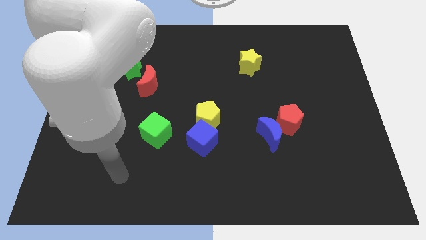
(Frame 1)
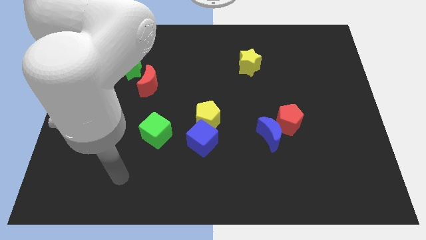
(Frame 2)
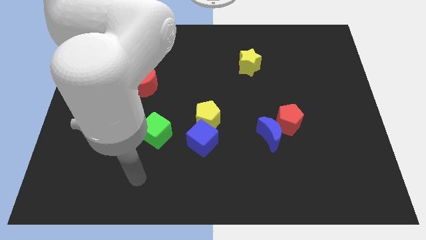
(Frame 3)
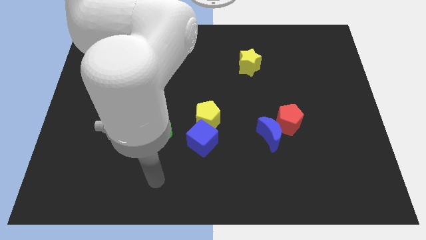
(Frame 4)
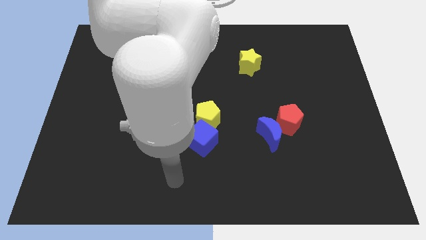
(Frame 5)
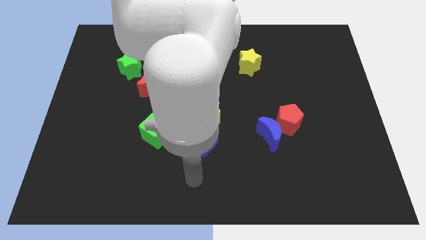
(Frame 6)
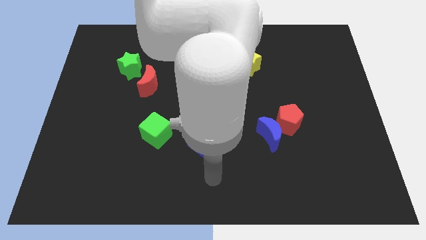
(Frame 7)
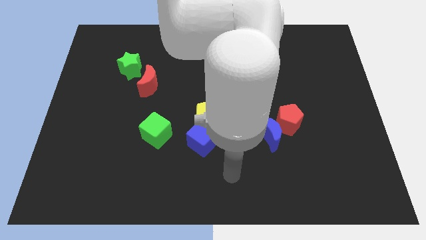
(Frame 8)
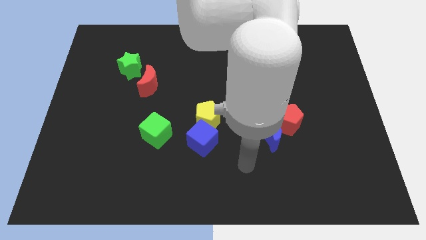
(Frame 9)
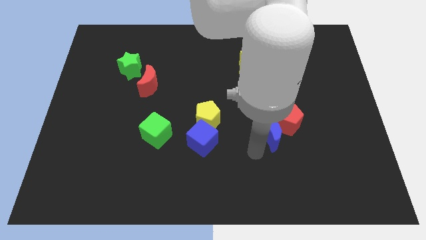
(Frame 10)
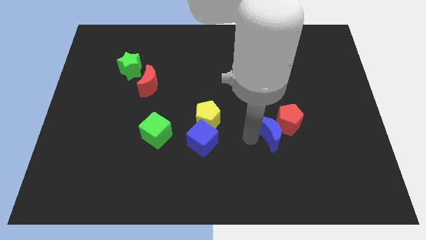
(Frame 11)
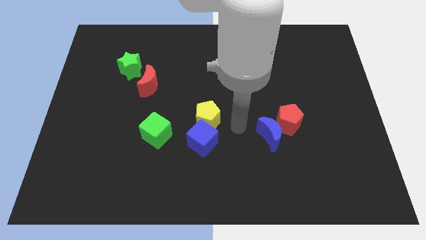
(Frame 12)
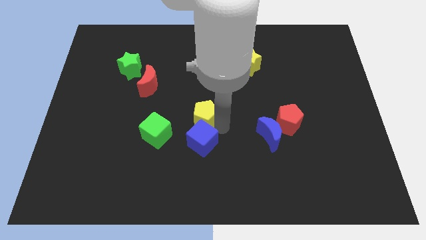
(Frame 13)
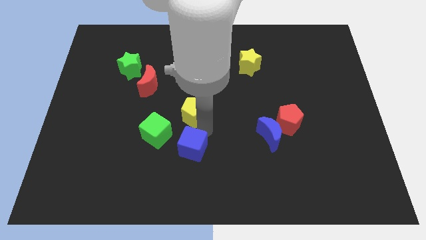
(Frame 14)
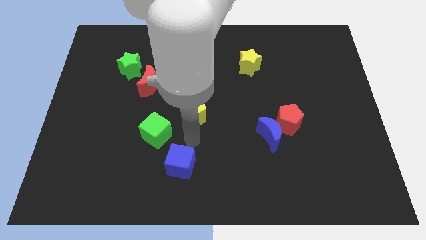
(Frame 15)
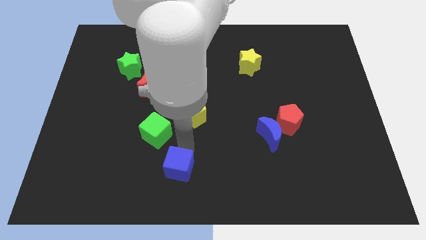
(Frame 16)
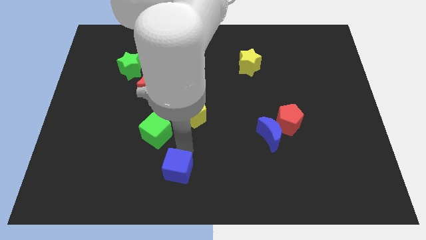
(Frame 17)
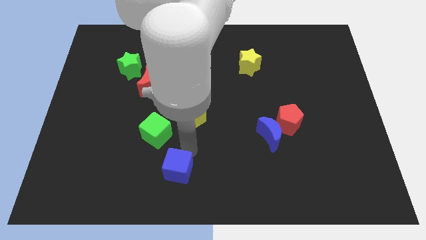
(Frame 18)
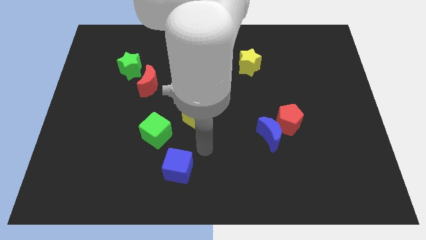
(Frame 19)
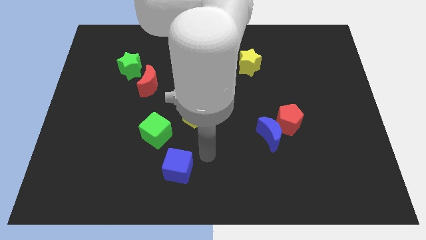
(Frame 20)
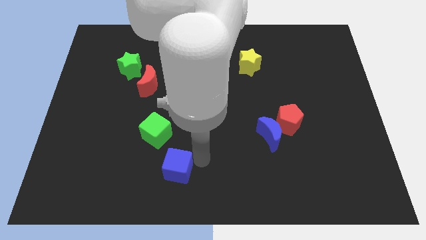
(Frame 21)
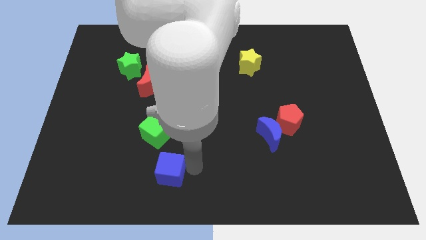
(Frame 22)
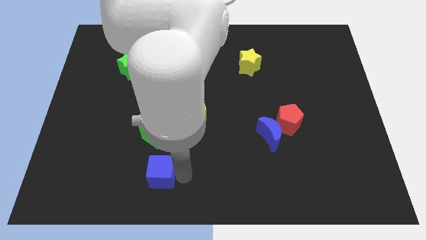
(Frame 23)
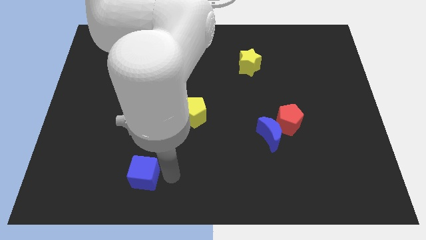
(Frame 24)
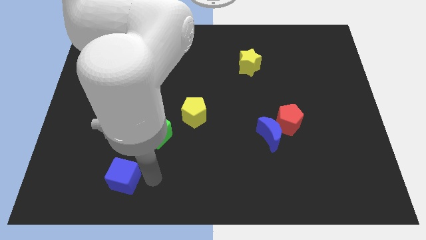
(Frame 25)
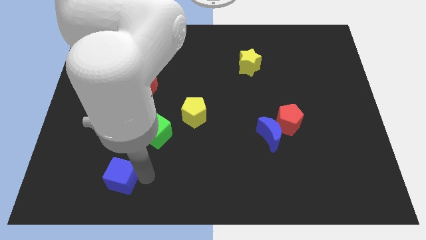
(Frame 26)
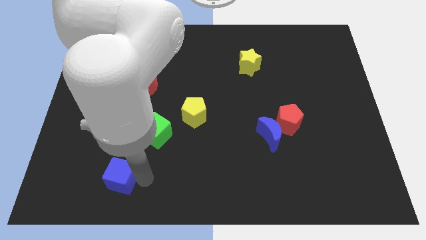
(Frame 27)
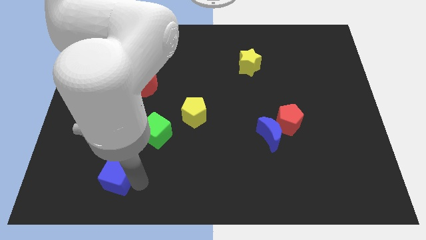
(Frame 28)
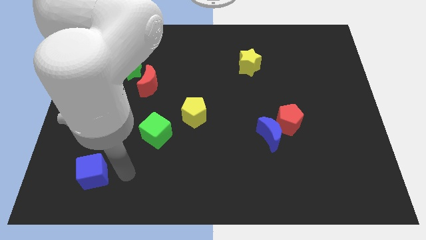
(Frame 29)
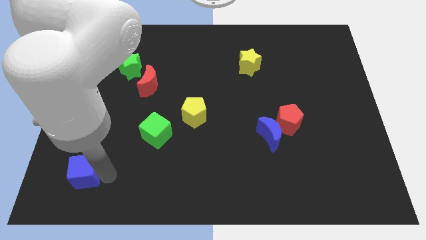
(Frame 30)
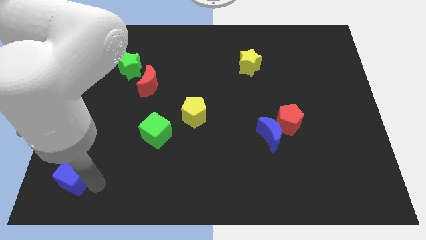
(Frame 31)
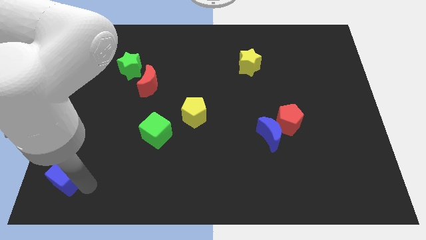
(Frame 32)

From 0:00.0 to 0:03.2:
move the blue cube towards the bottom left of the board

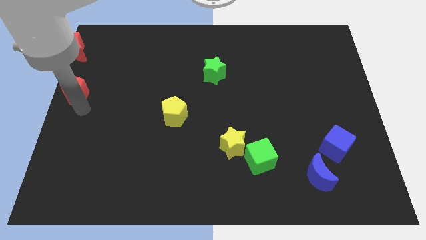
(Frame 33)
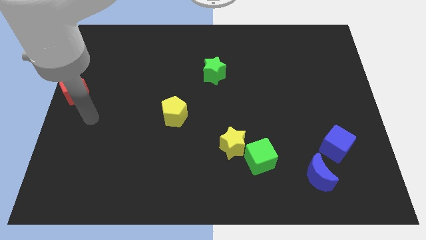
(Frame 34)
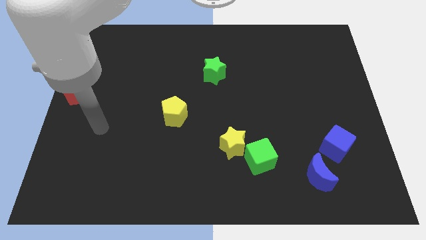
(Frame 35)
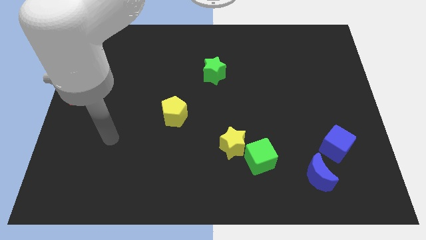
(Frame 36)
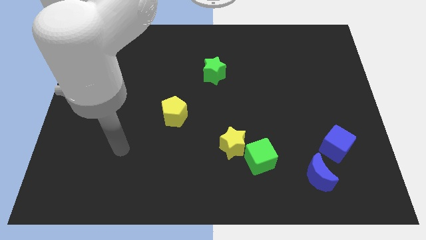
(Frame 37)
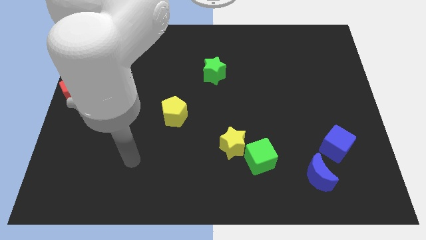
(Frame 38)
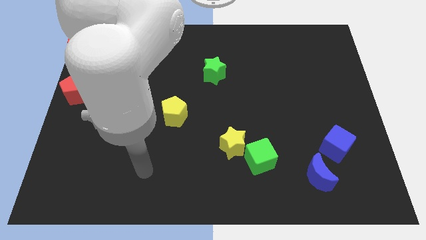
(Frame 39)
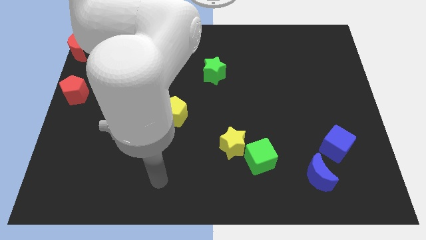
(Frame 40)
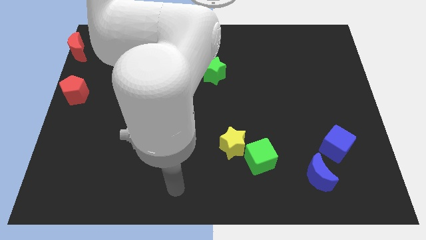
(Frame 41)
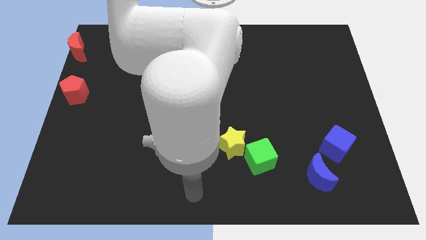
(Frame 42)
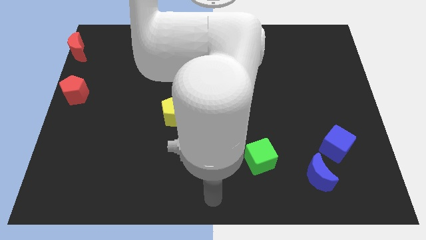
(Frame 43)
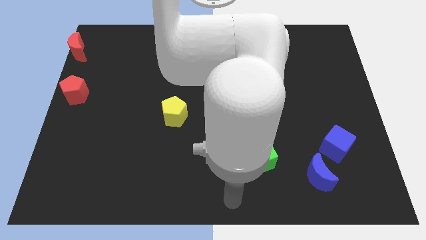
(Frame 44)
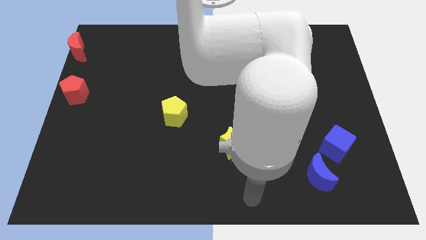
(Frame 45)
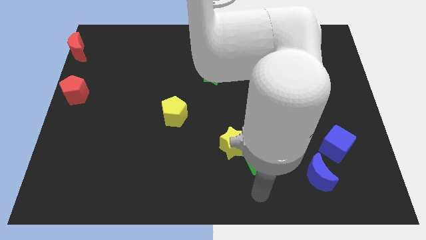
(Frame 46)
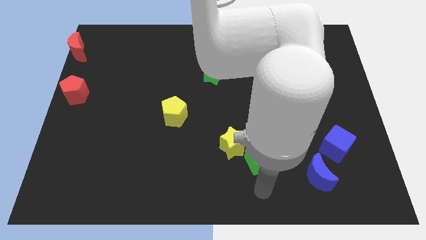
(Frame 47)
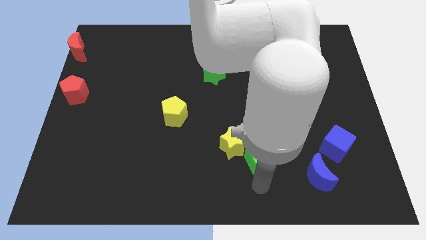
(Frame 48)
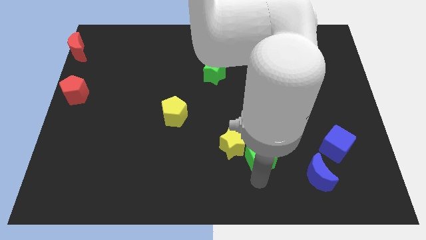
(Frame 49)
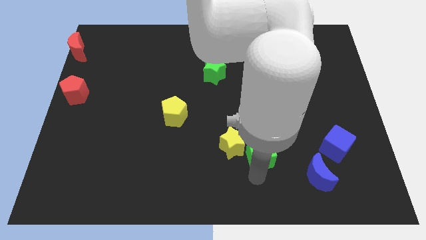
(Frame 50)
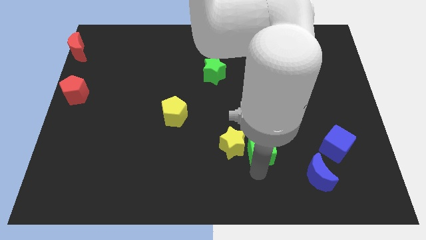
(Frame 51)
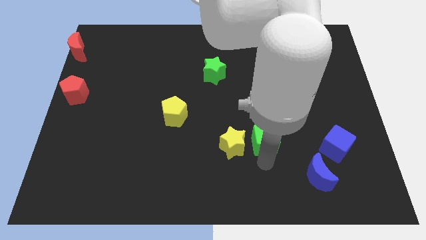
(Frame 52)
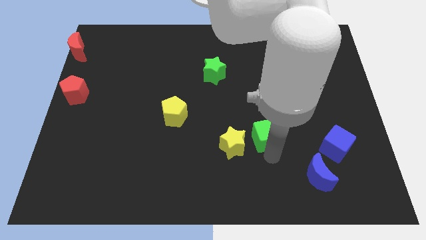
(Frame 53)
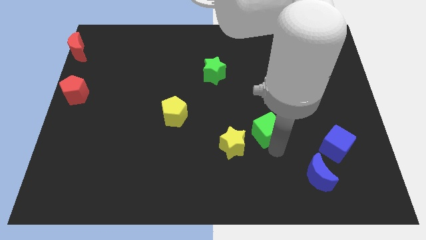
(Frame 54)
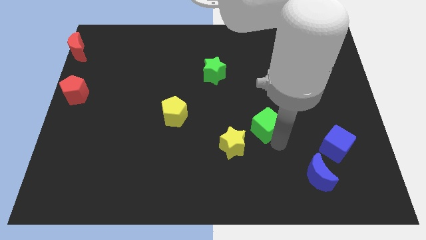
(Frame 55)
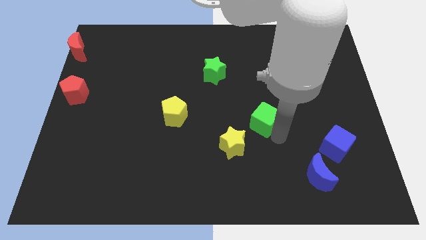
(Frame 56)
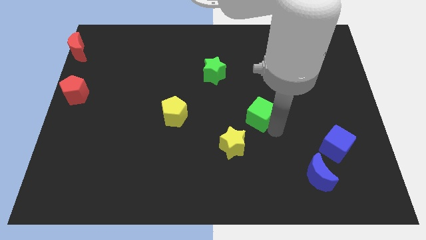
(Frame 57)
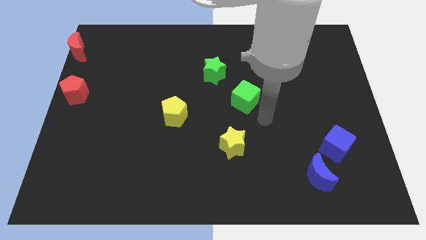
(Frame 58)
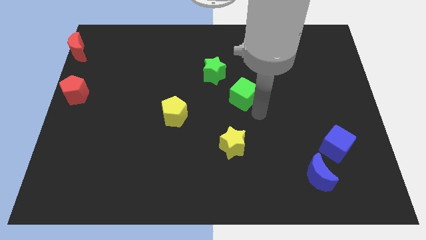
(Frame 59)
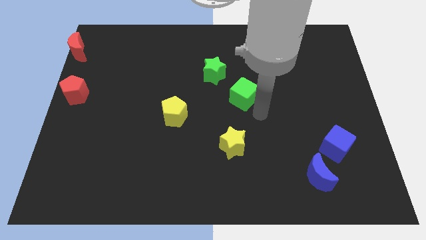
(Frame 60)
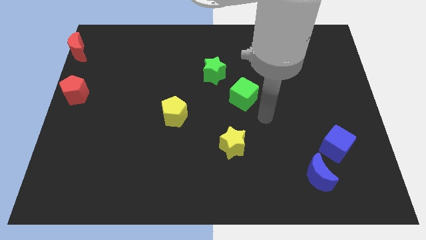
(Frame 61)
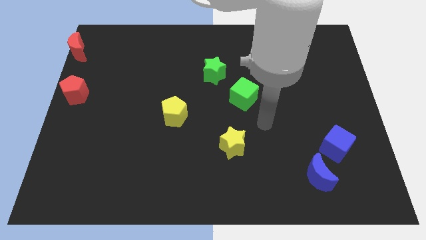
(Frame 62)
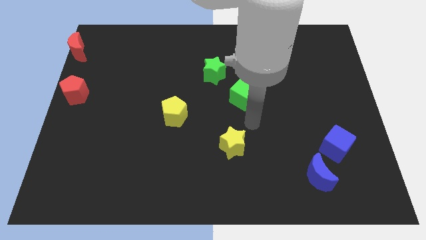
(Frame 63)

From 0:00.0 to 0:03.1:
place the green cube in between the green star and the yellow star

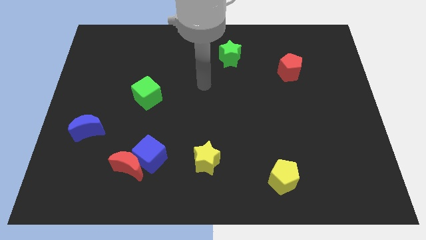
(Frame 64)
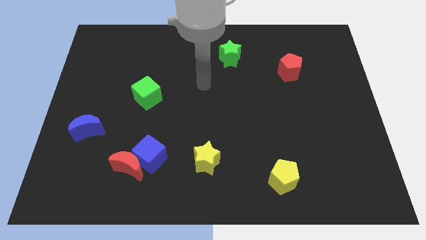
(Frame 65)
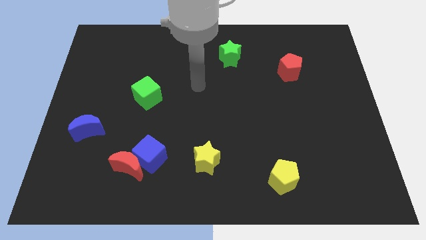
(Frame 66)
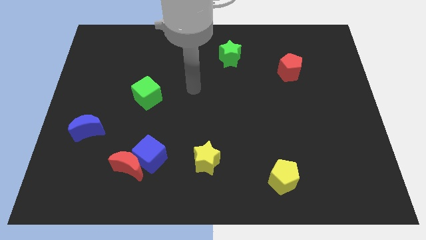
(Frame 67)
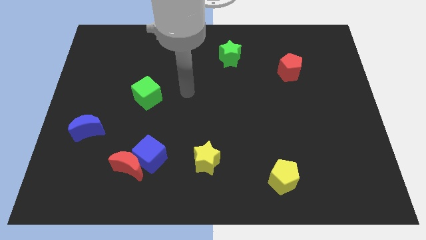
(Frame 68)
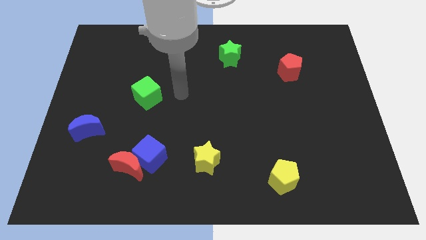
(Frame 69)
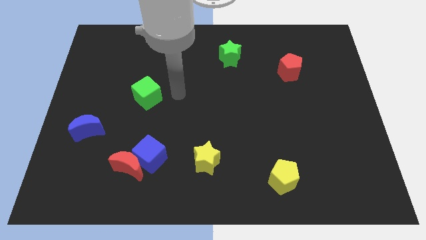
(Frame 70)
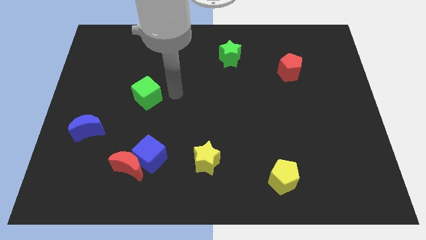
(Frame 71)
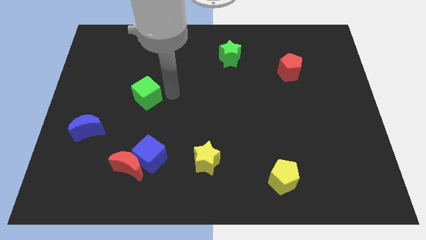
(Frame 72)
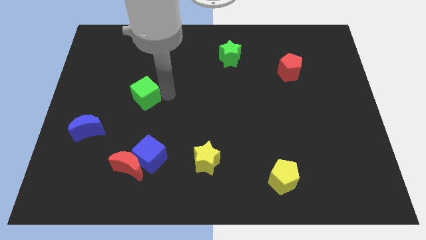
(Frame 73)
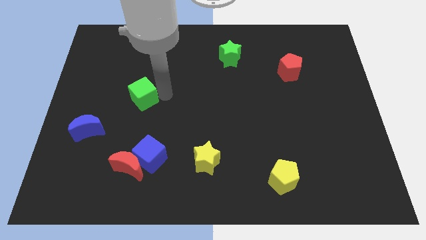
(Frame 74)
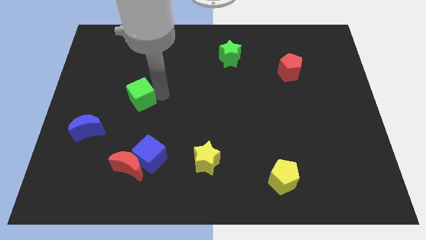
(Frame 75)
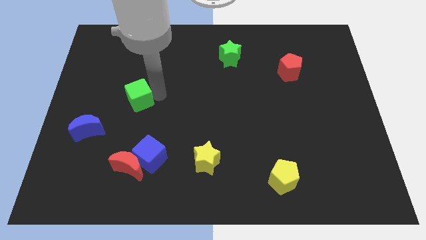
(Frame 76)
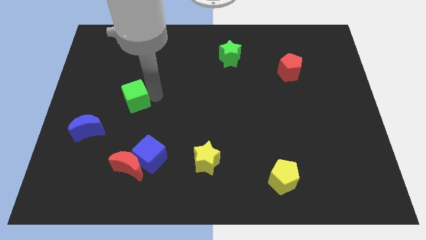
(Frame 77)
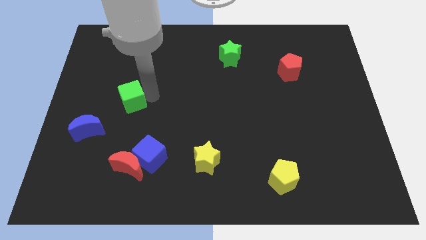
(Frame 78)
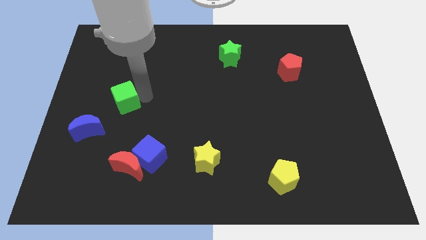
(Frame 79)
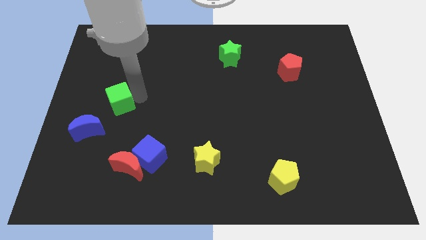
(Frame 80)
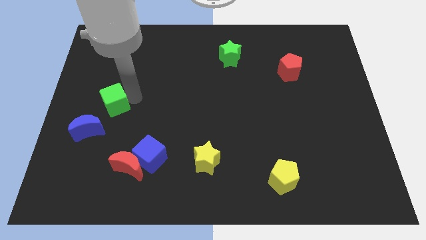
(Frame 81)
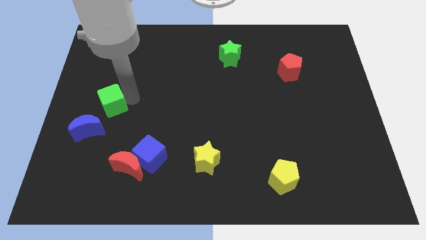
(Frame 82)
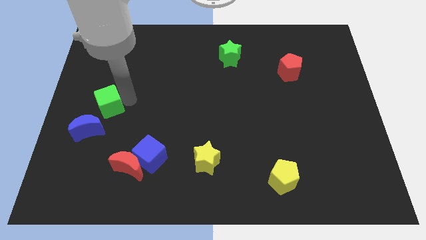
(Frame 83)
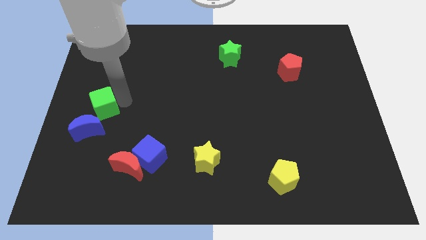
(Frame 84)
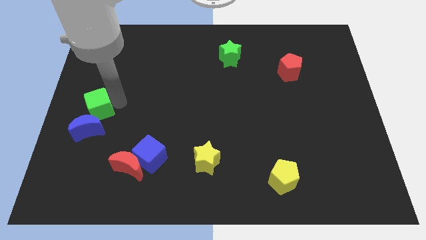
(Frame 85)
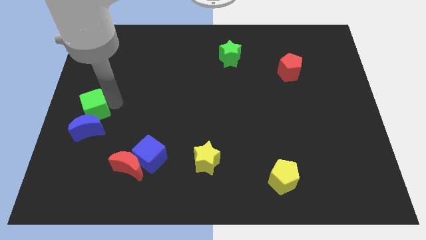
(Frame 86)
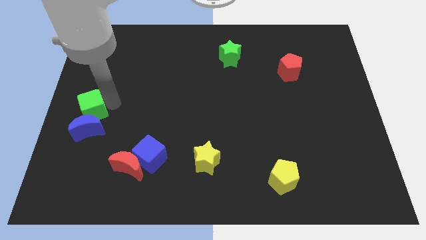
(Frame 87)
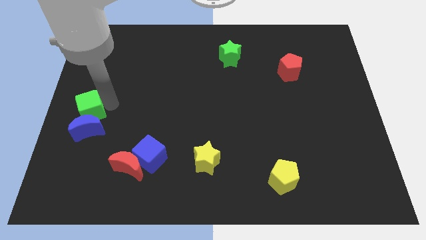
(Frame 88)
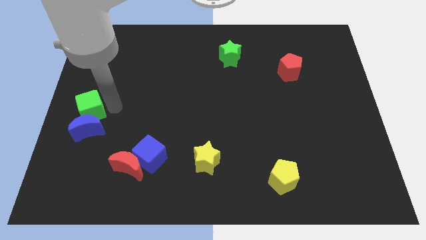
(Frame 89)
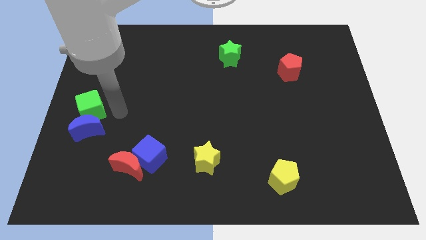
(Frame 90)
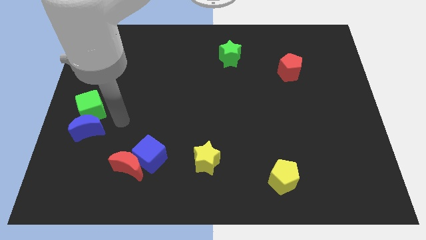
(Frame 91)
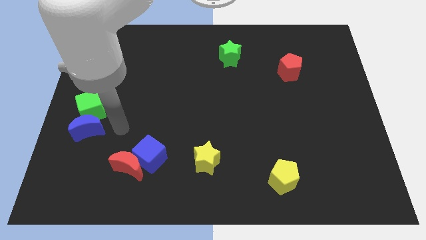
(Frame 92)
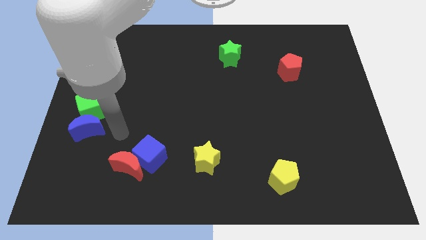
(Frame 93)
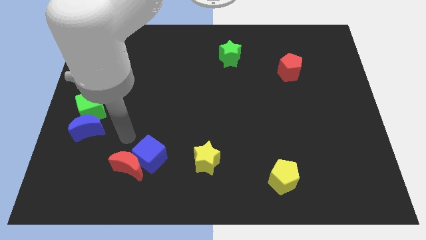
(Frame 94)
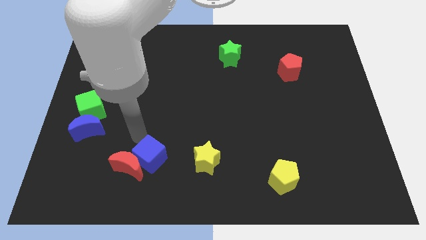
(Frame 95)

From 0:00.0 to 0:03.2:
place the green cube above the blue moon
